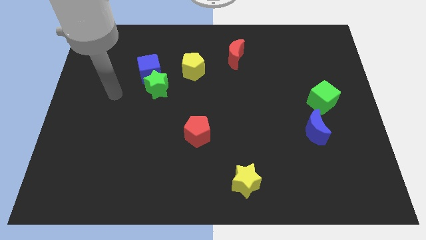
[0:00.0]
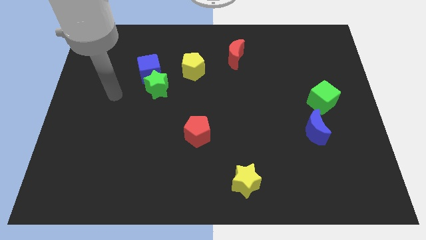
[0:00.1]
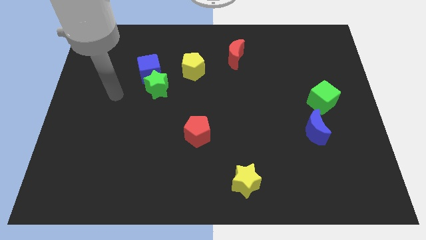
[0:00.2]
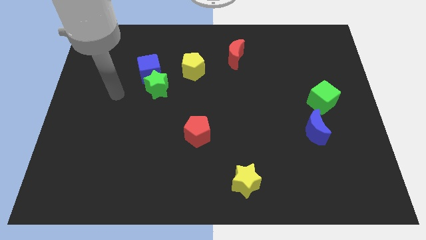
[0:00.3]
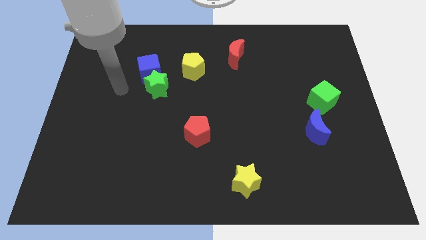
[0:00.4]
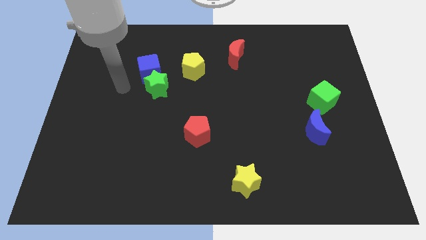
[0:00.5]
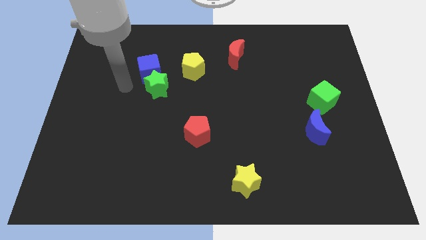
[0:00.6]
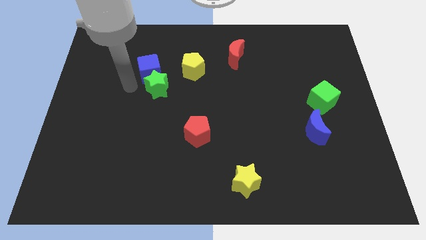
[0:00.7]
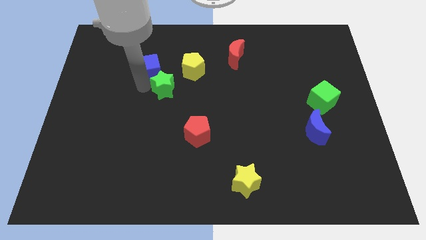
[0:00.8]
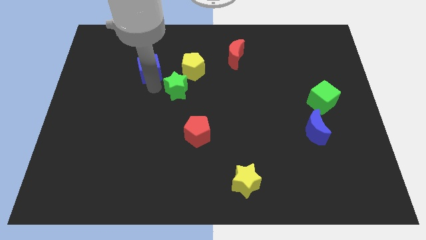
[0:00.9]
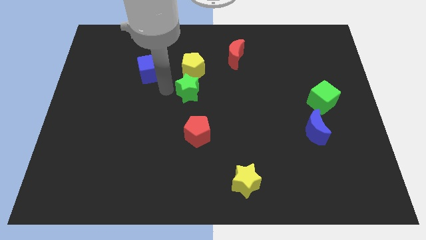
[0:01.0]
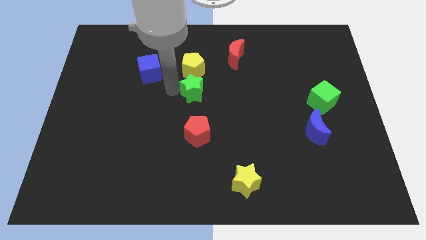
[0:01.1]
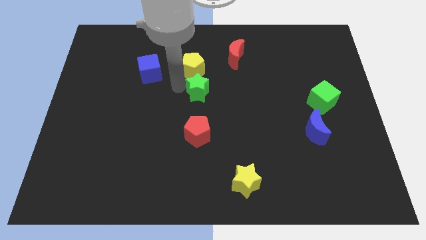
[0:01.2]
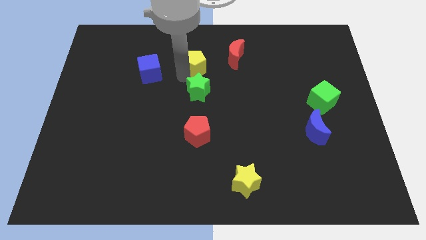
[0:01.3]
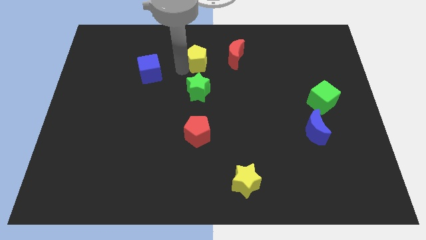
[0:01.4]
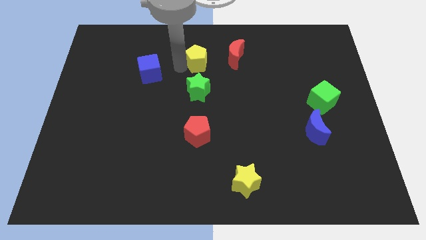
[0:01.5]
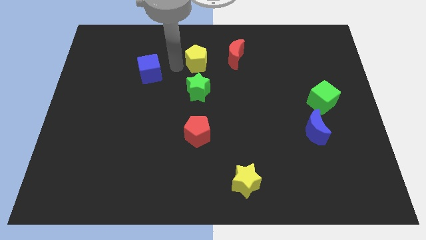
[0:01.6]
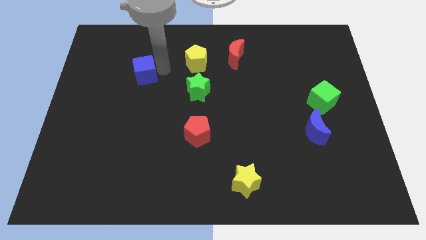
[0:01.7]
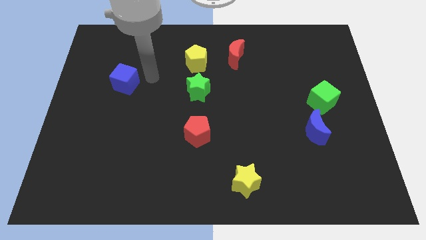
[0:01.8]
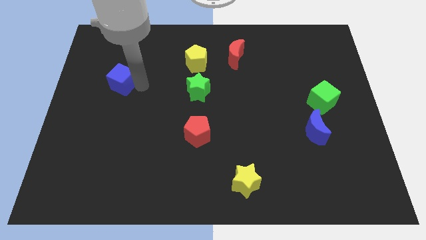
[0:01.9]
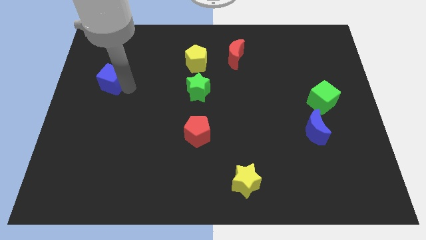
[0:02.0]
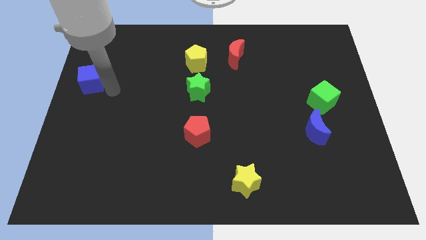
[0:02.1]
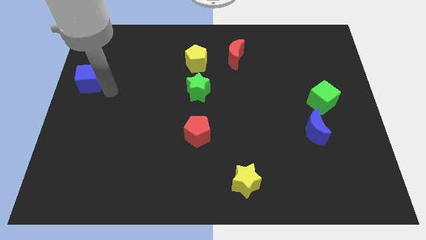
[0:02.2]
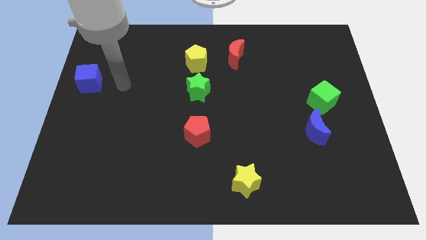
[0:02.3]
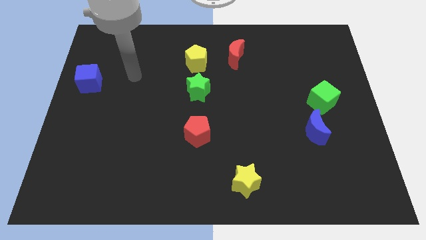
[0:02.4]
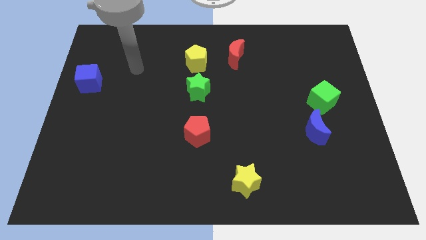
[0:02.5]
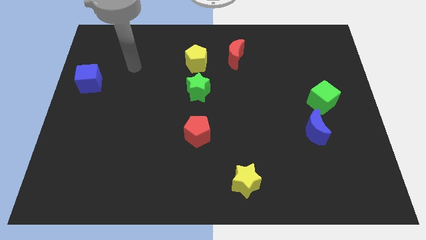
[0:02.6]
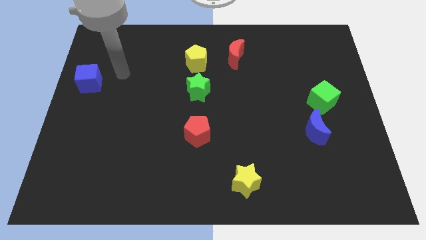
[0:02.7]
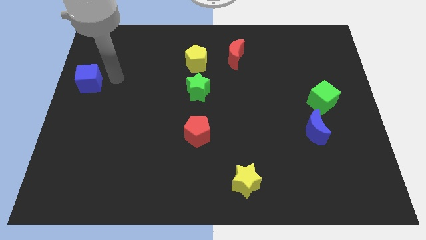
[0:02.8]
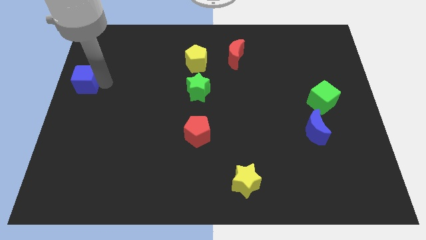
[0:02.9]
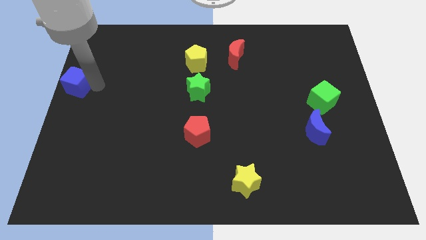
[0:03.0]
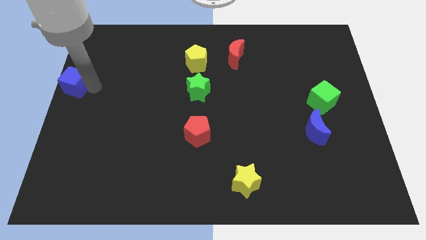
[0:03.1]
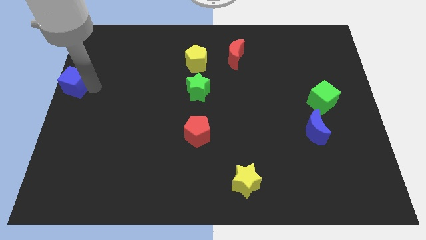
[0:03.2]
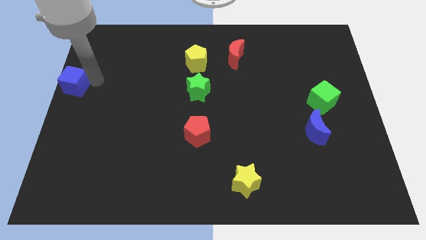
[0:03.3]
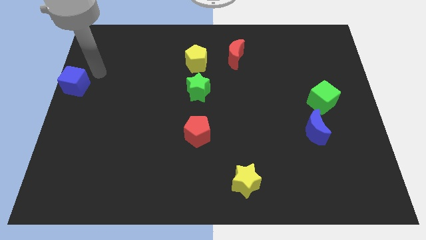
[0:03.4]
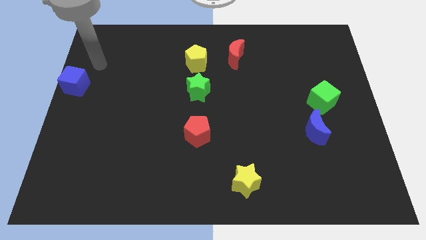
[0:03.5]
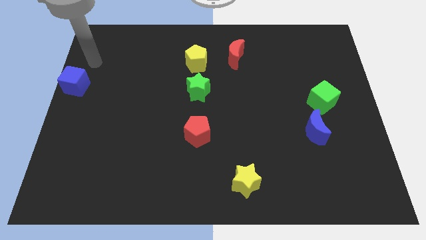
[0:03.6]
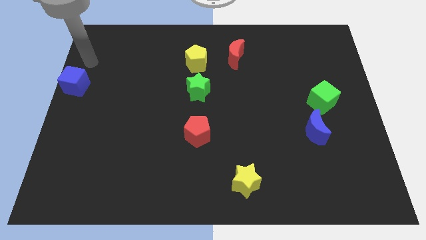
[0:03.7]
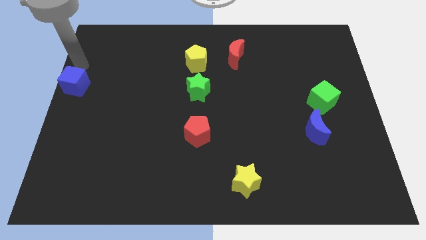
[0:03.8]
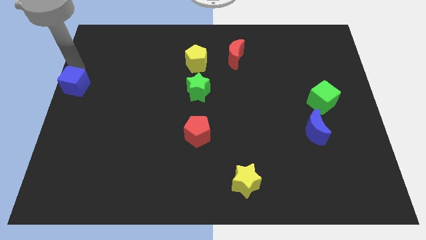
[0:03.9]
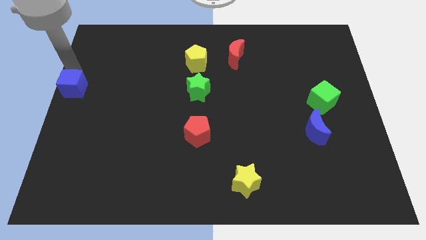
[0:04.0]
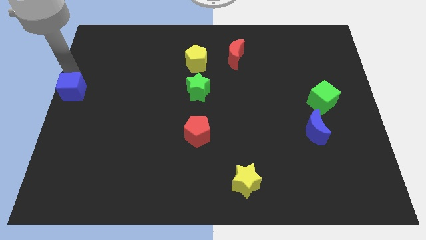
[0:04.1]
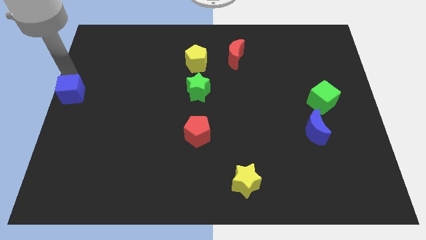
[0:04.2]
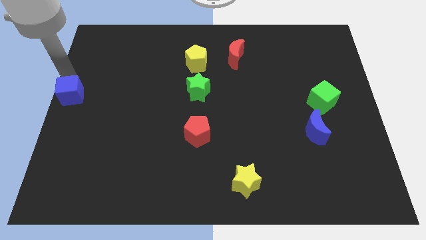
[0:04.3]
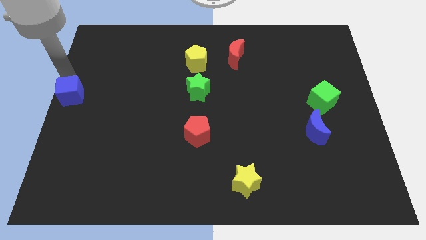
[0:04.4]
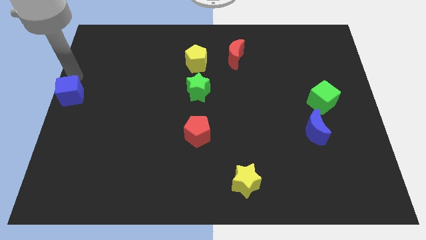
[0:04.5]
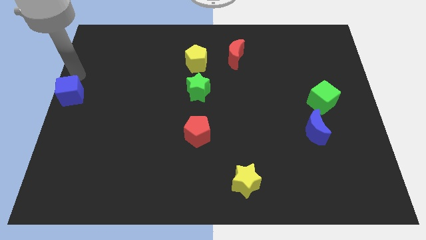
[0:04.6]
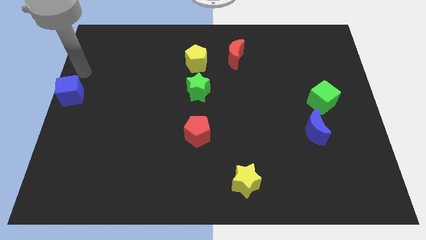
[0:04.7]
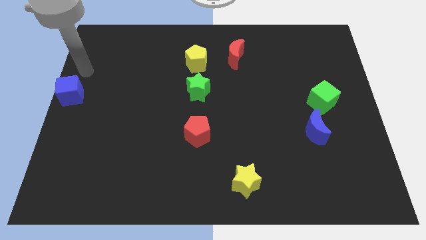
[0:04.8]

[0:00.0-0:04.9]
push the green star away from the blue cube

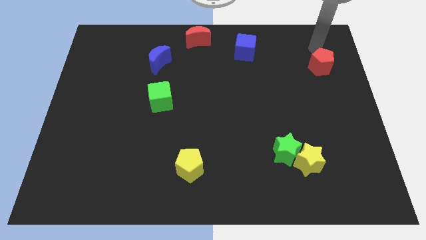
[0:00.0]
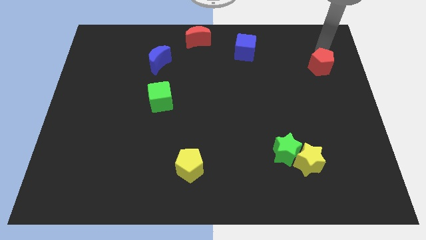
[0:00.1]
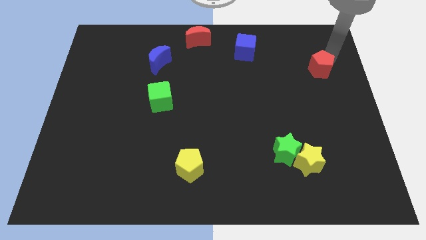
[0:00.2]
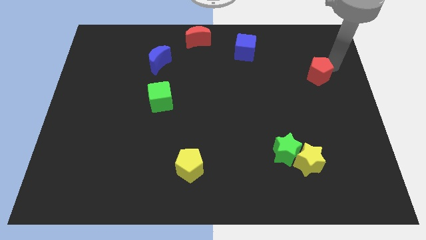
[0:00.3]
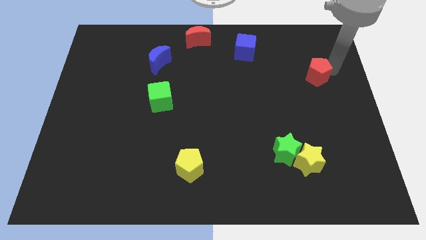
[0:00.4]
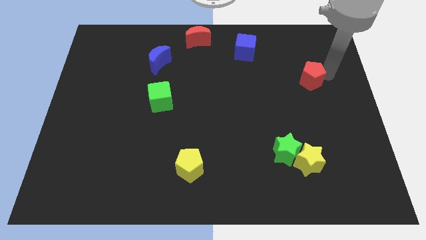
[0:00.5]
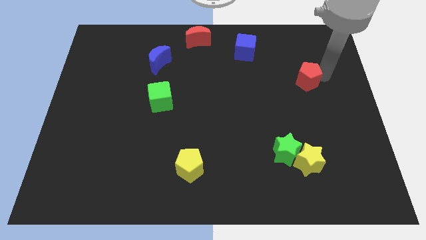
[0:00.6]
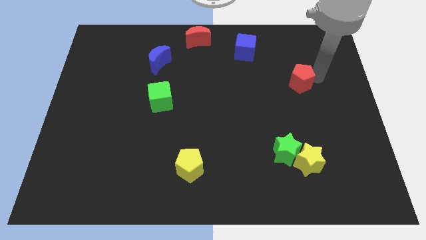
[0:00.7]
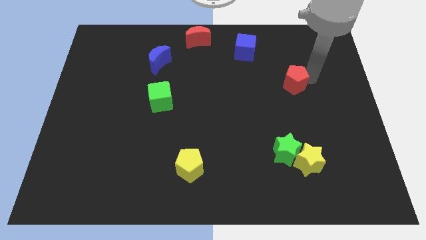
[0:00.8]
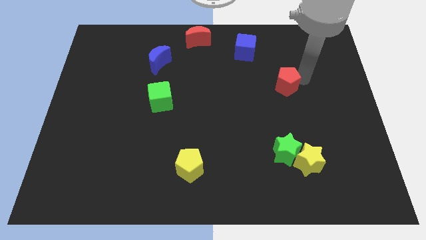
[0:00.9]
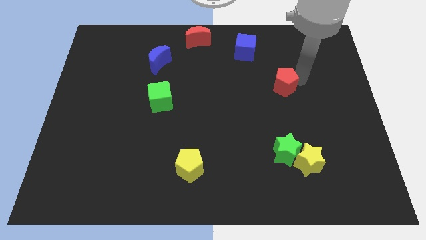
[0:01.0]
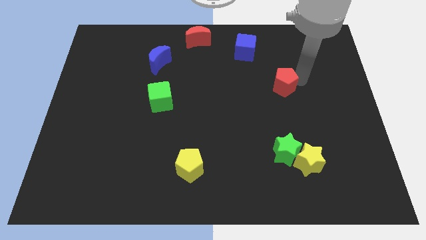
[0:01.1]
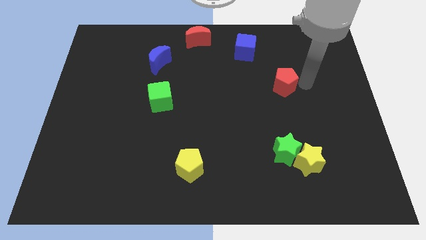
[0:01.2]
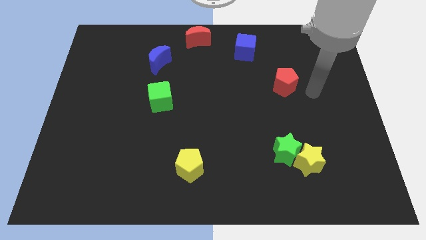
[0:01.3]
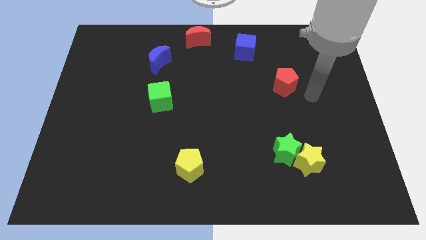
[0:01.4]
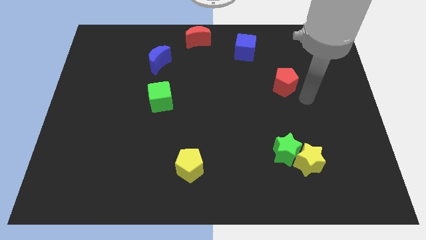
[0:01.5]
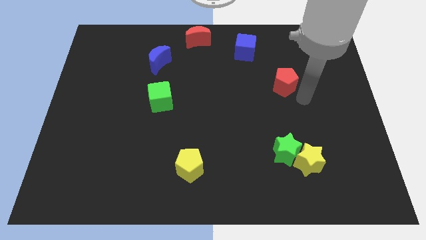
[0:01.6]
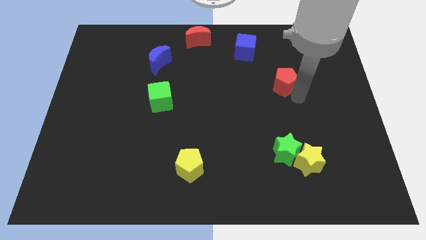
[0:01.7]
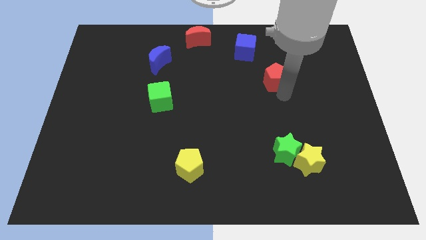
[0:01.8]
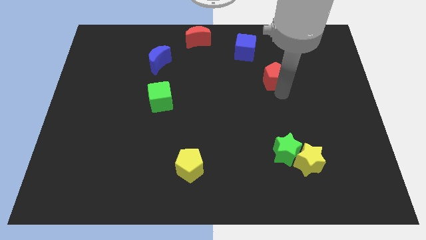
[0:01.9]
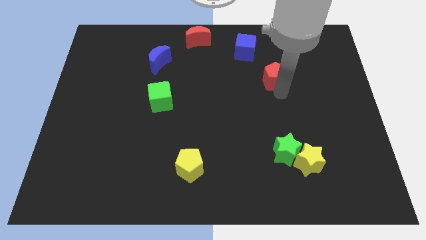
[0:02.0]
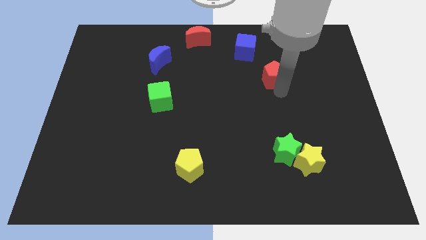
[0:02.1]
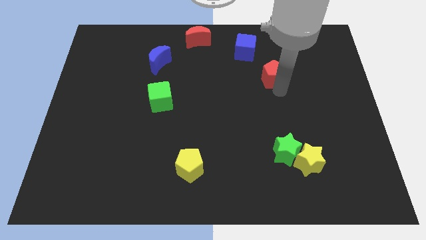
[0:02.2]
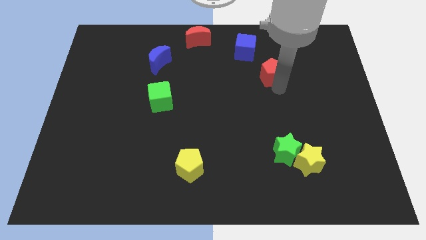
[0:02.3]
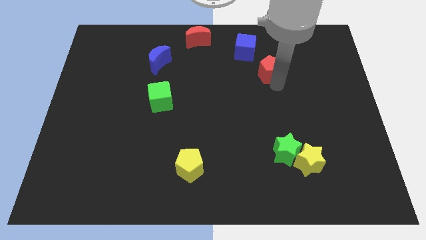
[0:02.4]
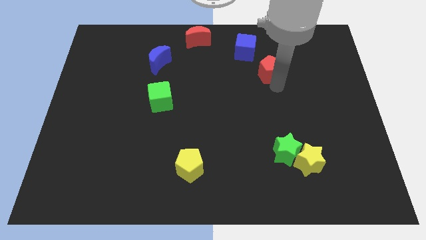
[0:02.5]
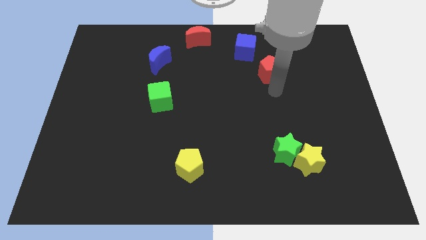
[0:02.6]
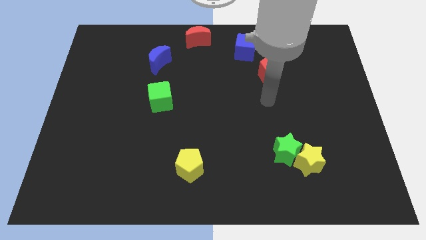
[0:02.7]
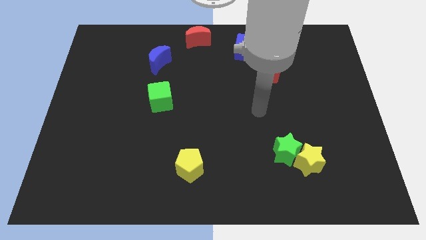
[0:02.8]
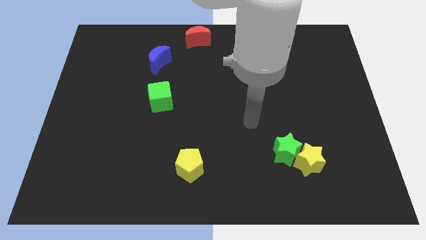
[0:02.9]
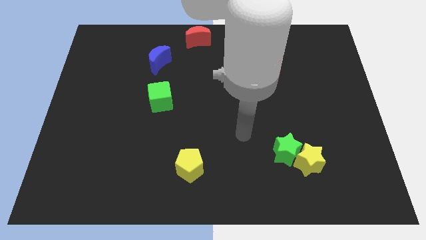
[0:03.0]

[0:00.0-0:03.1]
drag the red pentagon diagonally bottom right to the blue cube

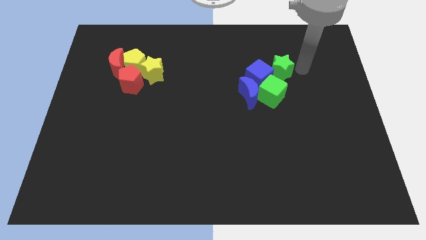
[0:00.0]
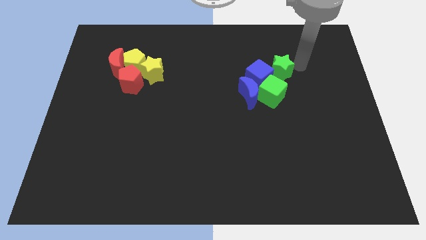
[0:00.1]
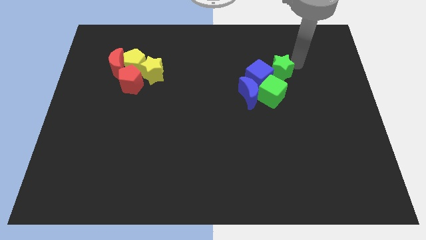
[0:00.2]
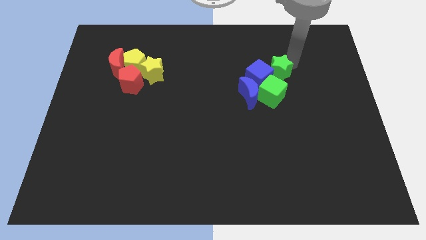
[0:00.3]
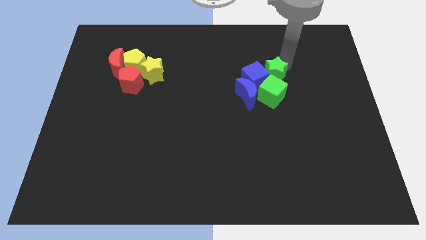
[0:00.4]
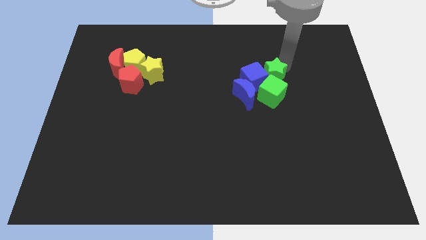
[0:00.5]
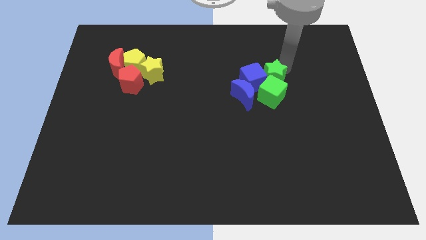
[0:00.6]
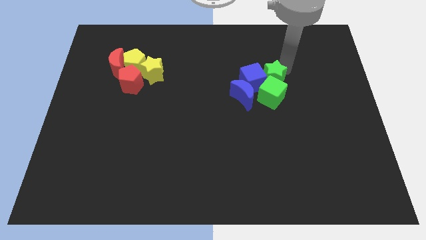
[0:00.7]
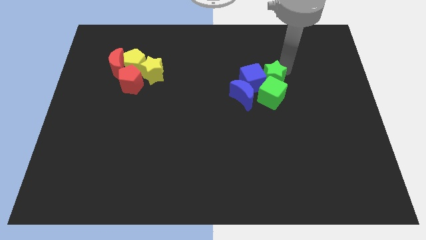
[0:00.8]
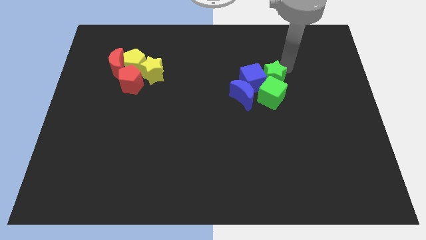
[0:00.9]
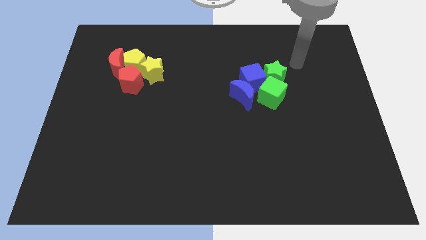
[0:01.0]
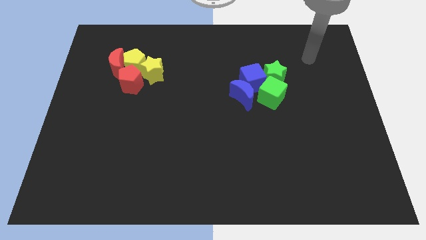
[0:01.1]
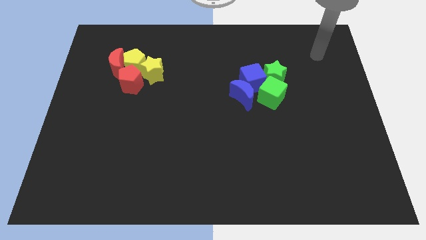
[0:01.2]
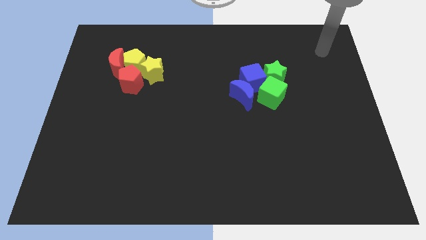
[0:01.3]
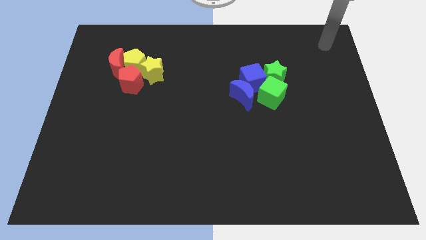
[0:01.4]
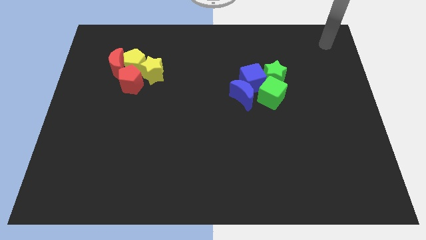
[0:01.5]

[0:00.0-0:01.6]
move the green star to the blue cube and green cube
